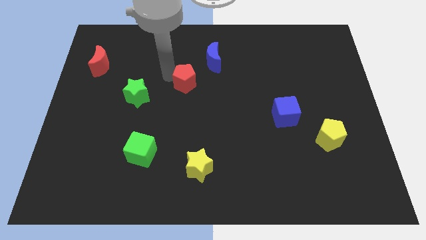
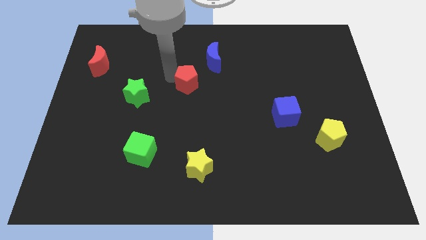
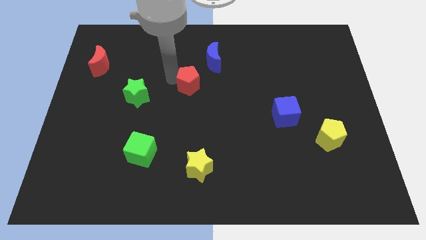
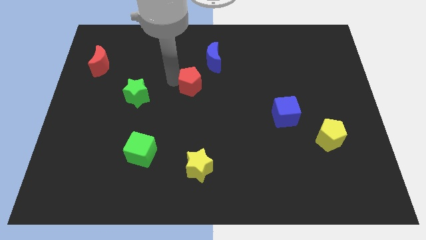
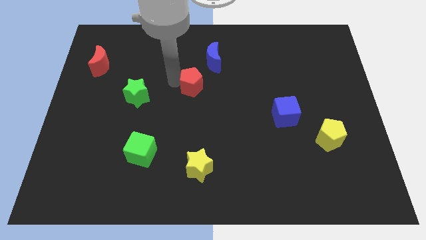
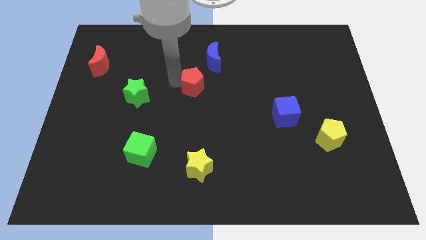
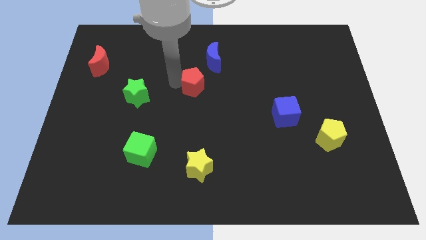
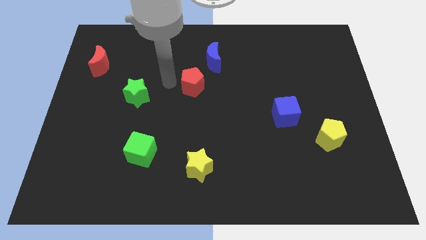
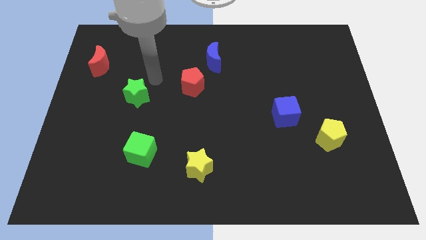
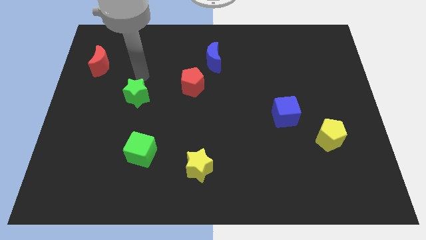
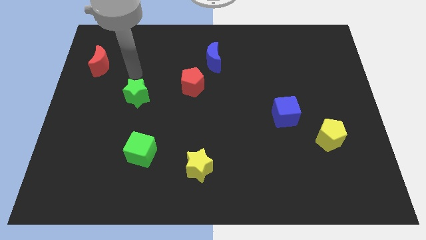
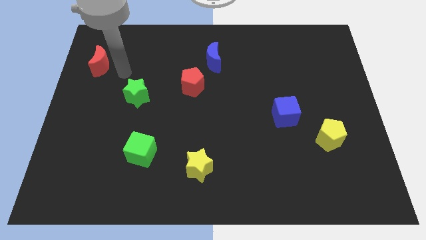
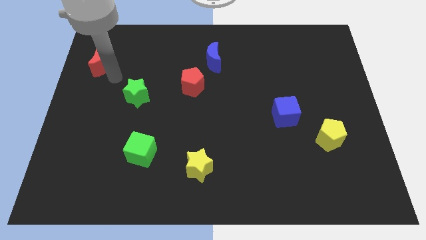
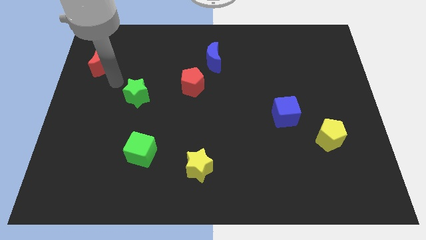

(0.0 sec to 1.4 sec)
push the red pentagon to the bottom left of the blue moon

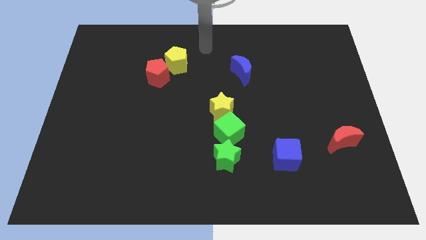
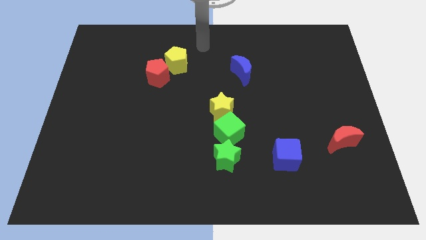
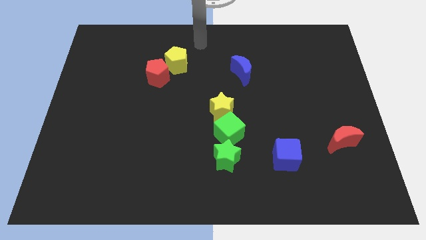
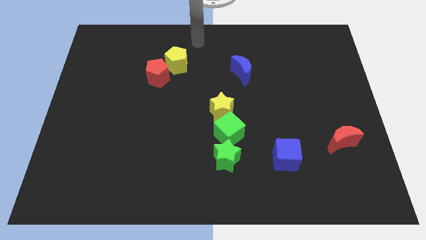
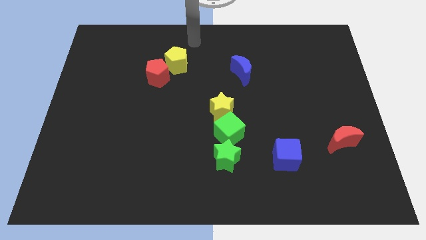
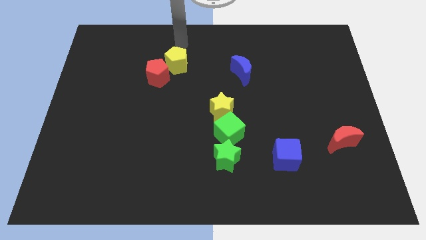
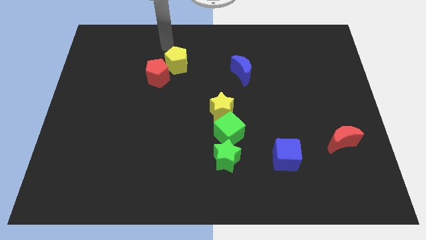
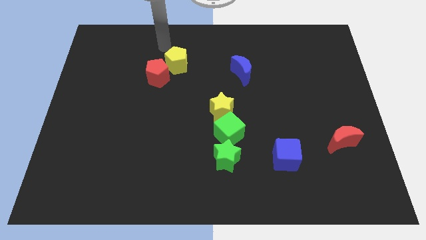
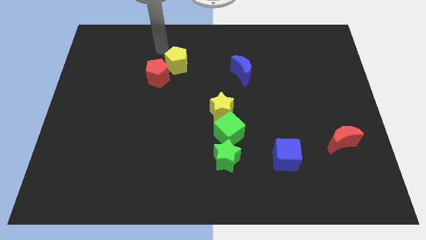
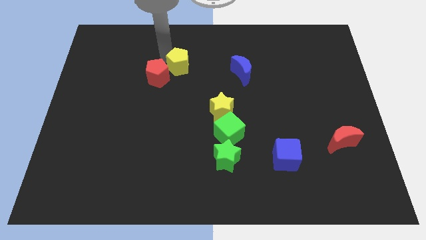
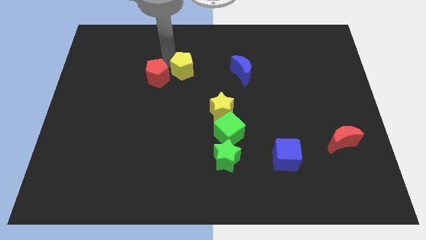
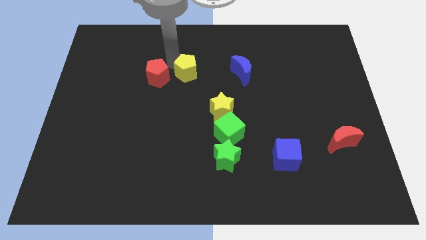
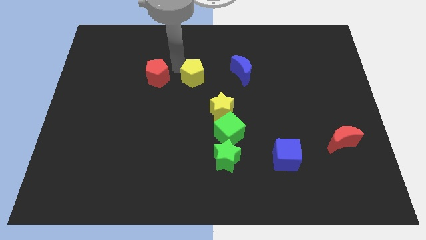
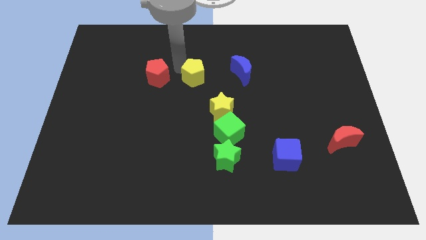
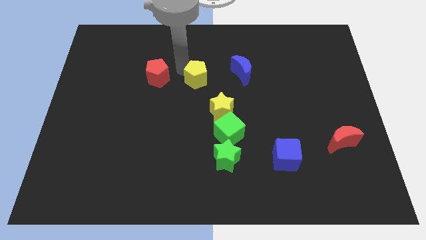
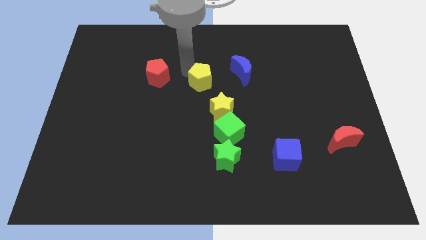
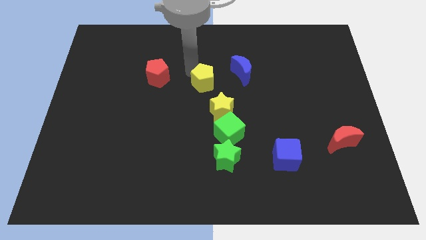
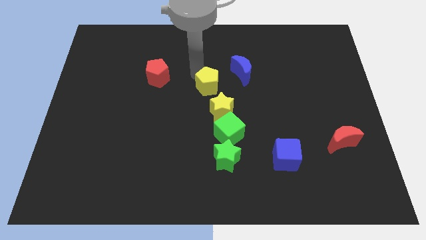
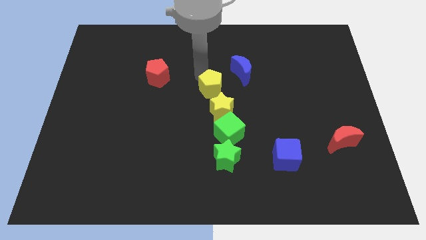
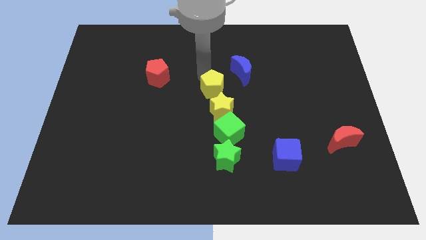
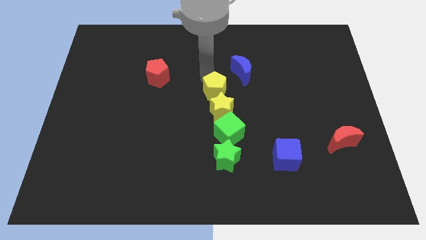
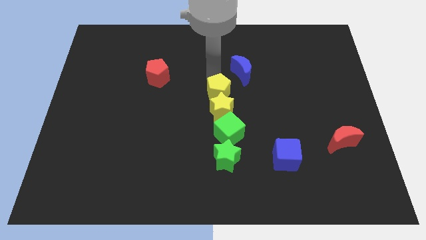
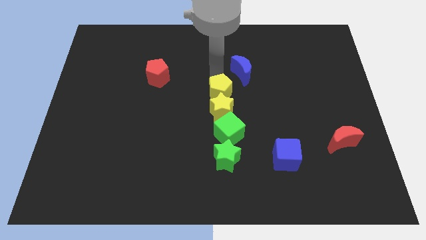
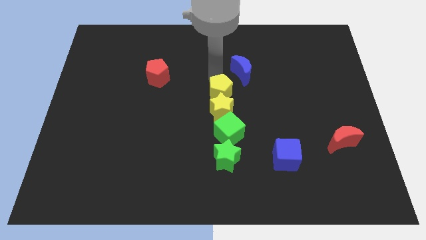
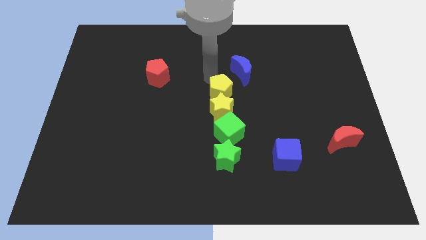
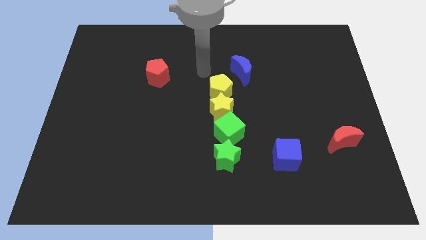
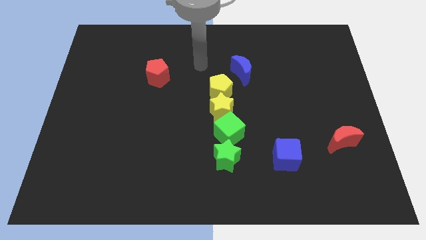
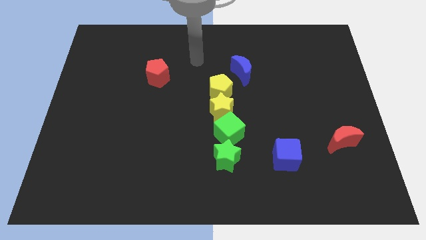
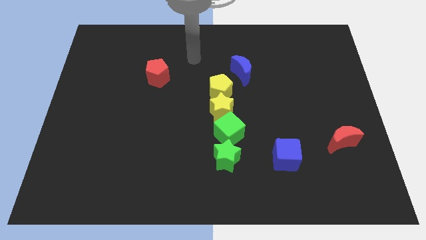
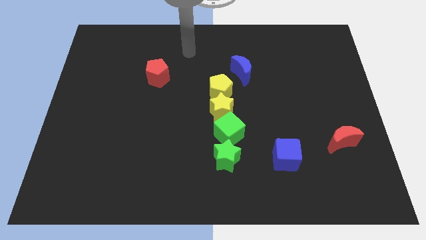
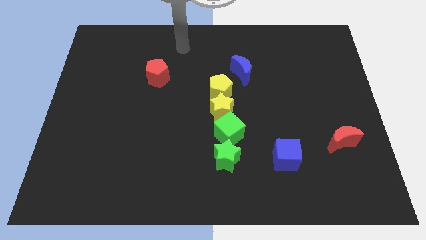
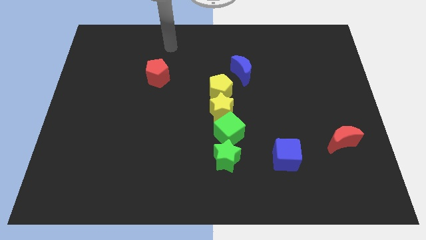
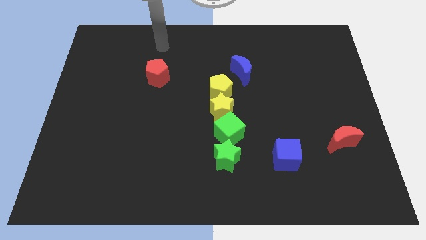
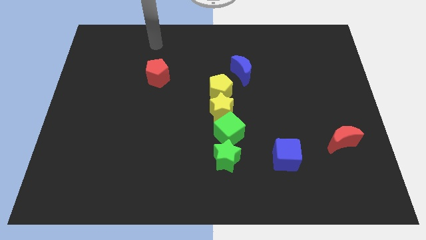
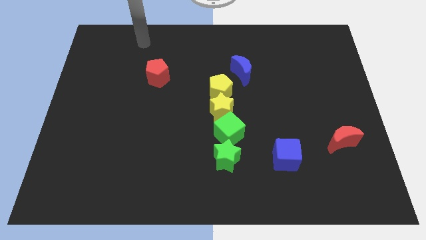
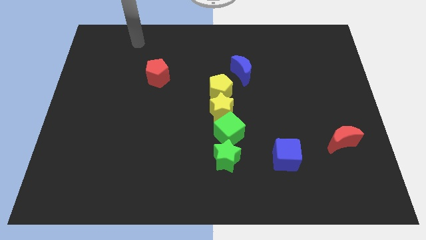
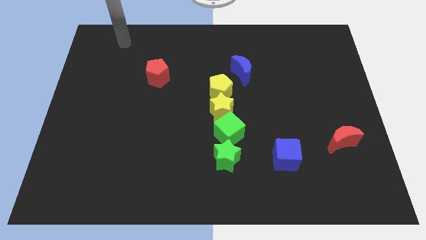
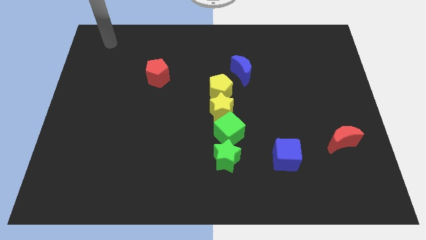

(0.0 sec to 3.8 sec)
push the yellow pentagon towards the top of the yellow star

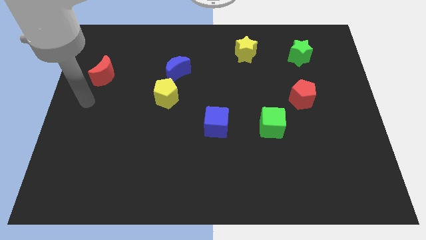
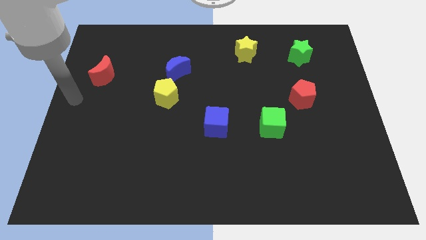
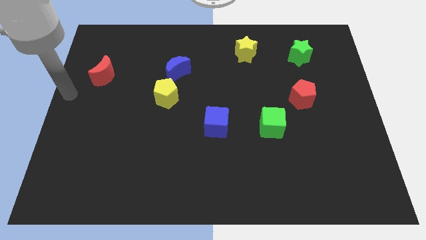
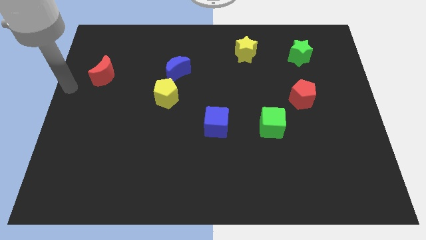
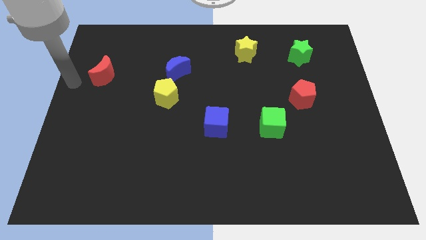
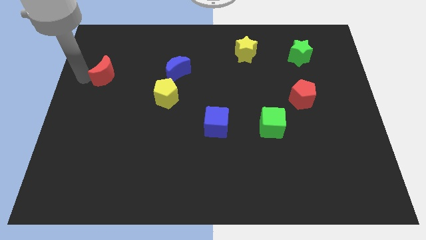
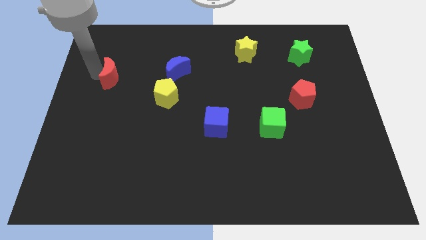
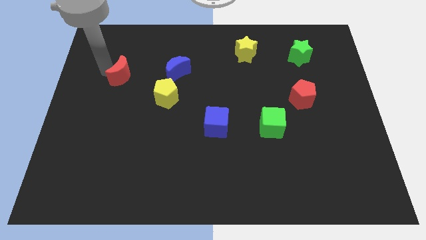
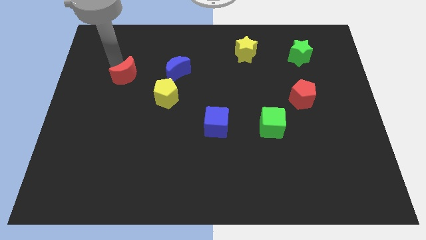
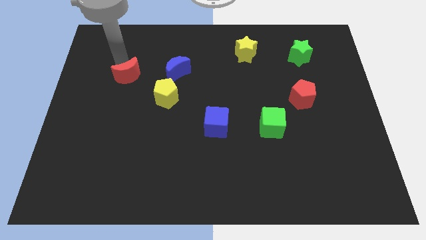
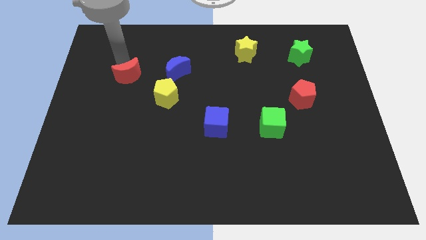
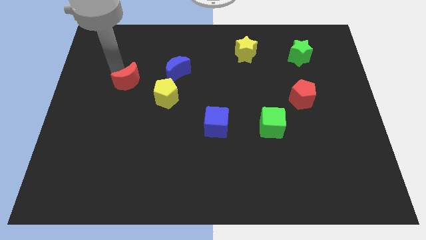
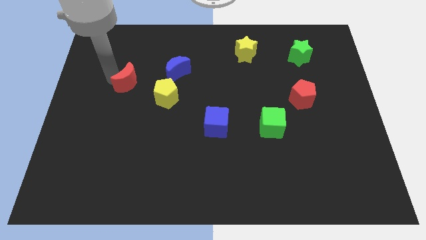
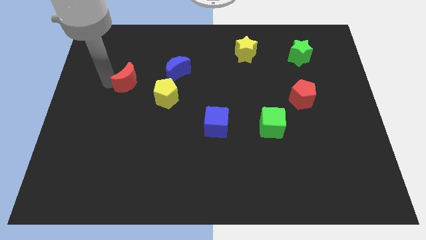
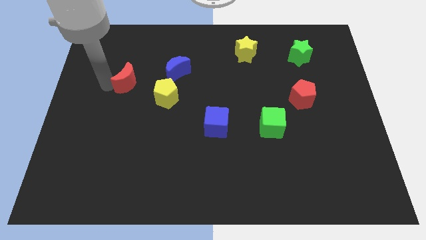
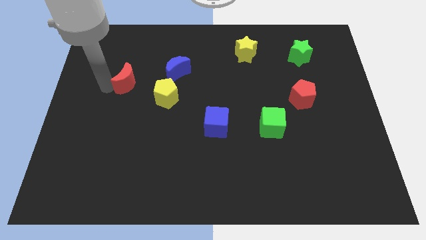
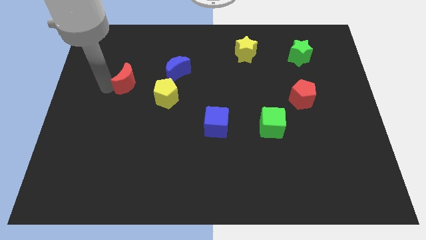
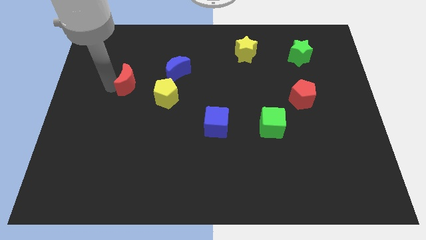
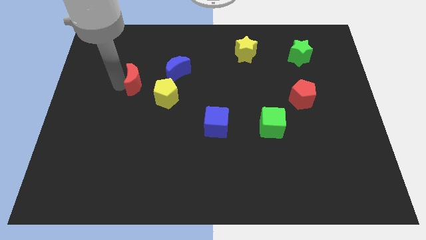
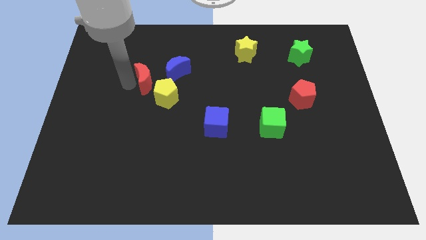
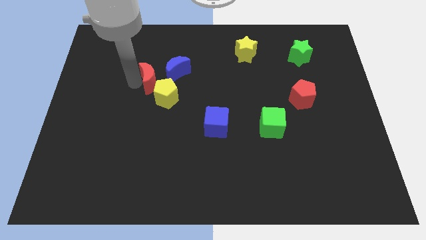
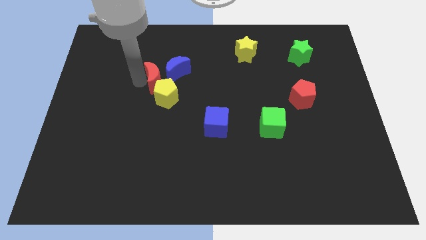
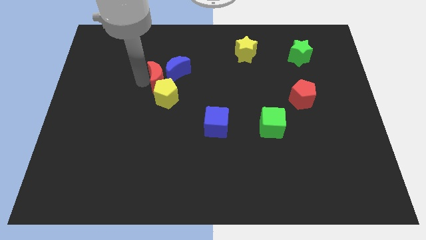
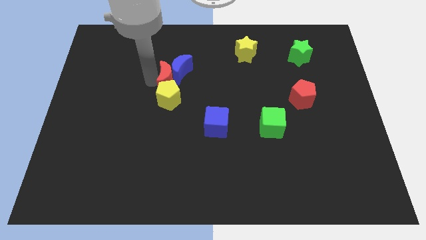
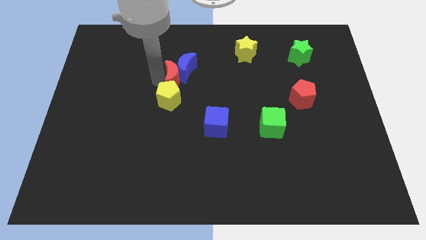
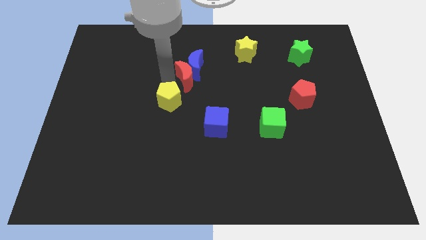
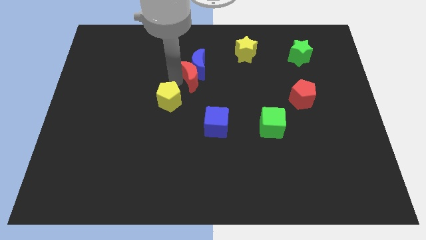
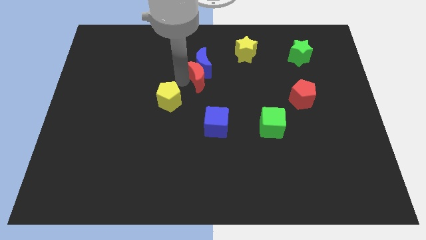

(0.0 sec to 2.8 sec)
push the red moon into the blue moon

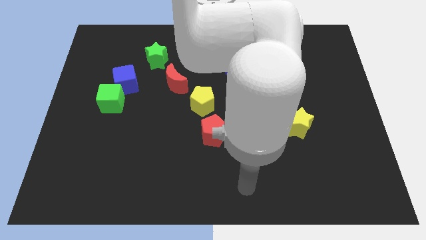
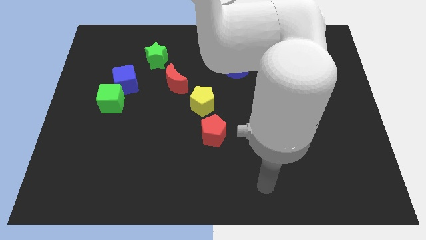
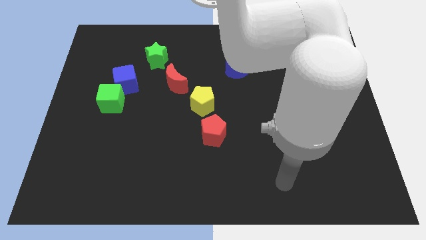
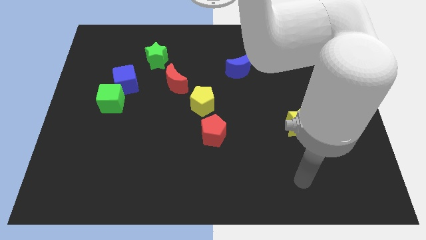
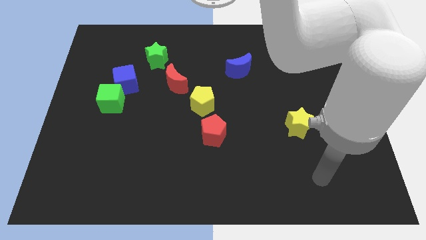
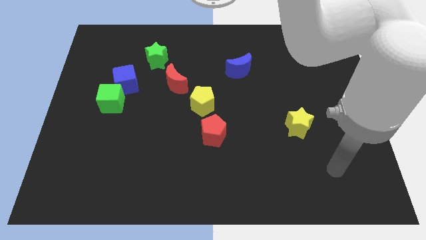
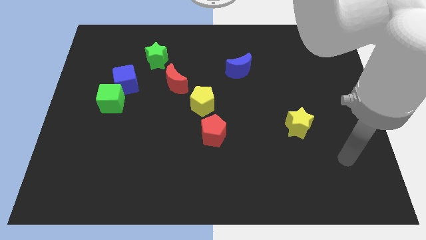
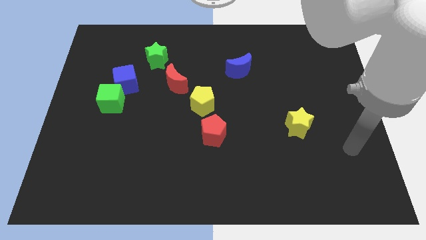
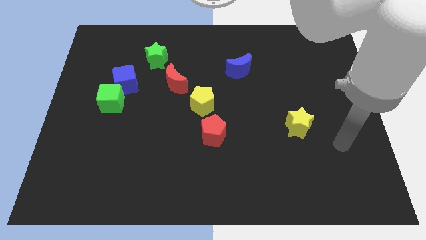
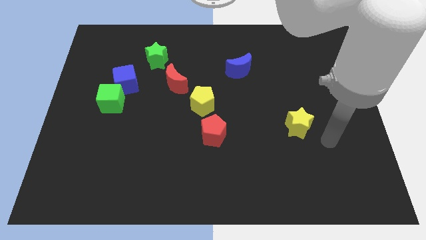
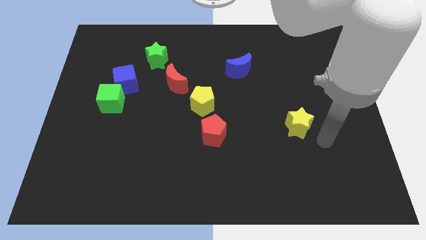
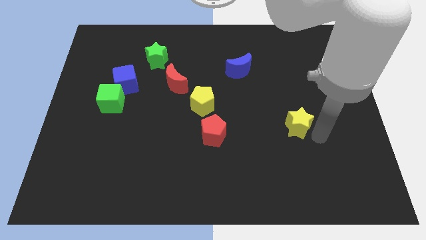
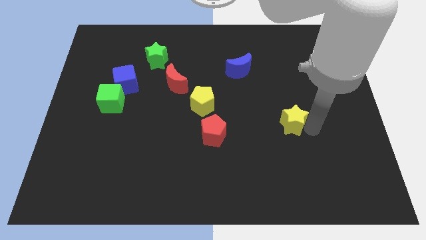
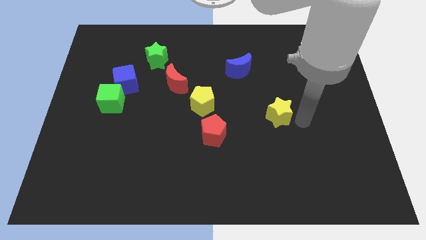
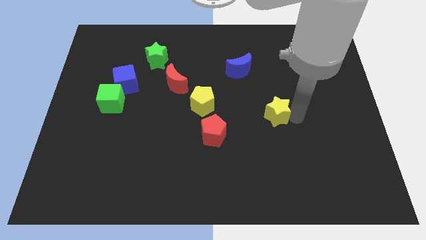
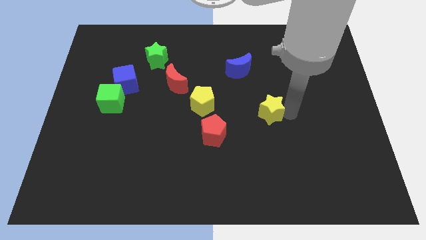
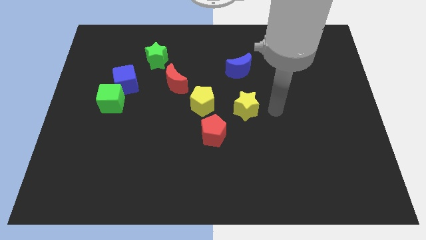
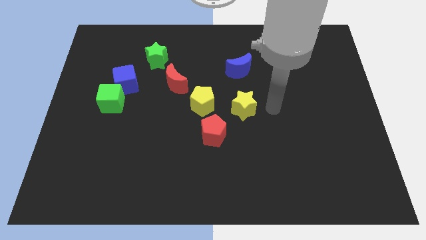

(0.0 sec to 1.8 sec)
push the yellow star towards the yellow pentagon
